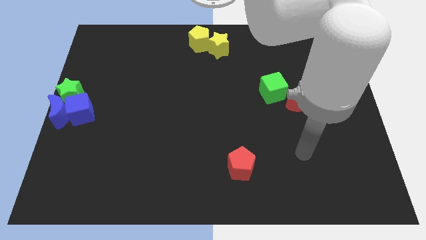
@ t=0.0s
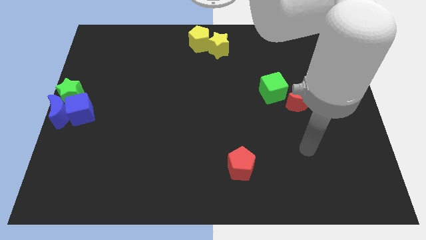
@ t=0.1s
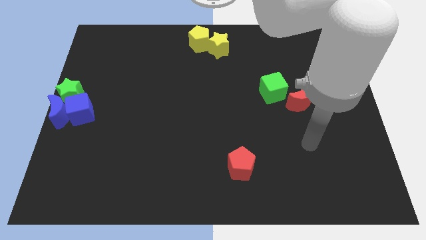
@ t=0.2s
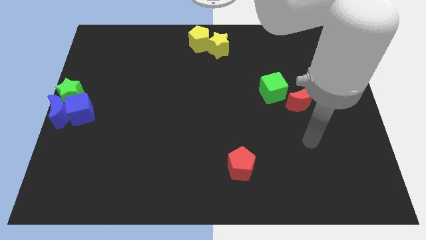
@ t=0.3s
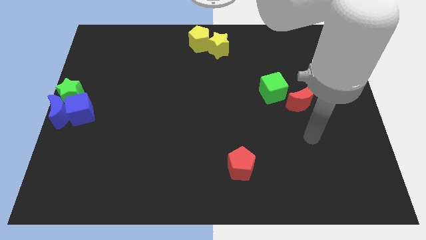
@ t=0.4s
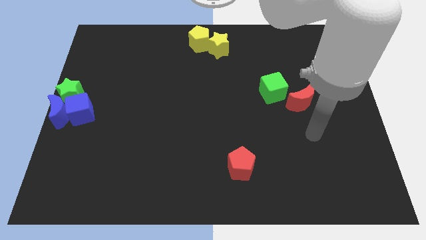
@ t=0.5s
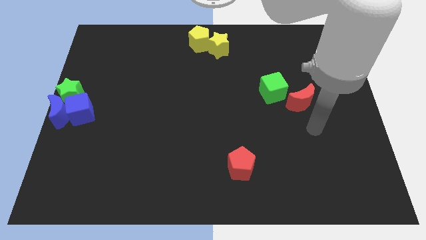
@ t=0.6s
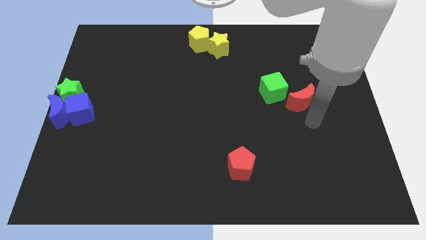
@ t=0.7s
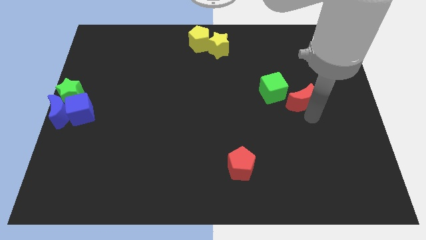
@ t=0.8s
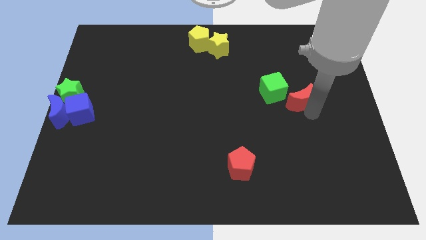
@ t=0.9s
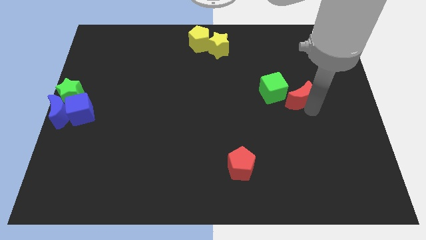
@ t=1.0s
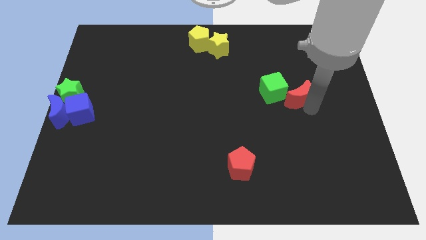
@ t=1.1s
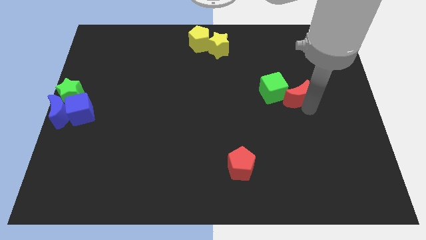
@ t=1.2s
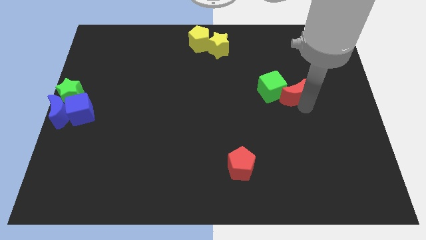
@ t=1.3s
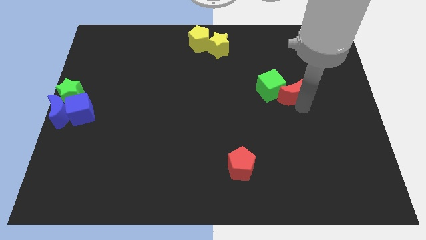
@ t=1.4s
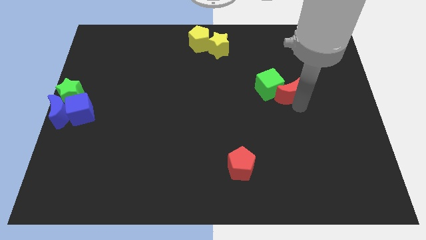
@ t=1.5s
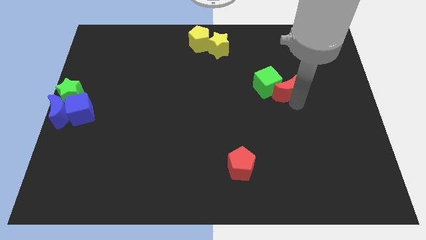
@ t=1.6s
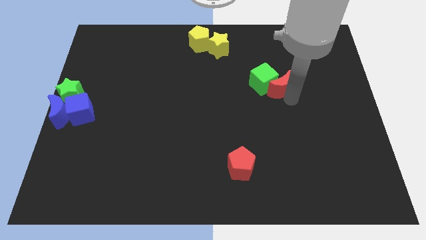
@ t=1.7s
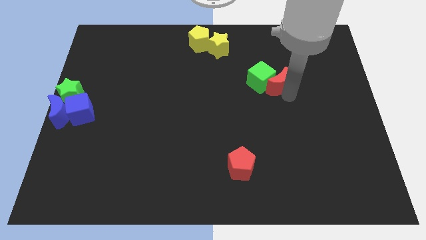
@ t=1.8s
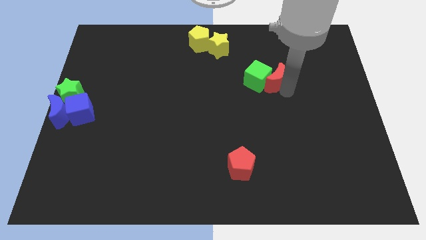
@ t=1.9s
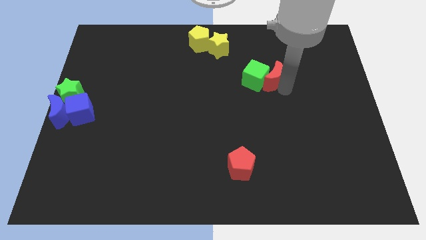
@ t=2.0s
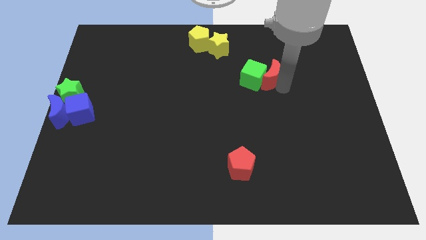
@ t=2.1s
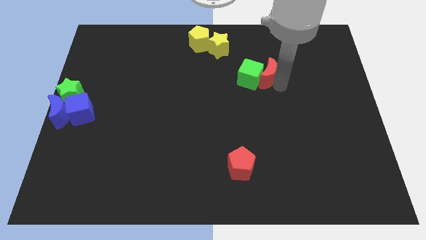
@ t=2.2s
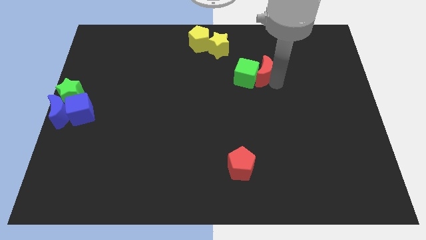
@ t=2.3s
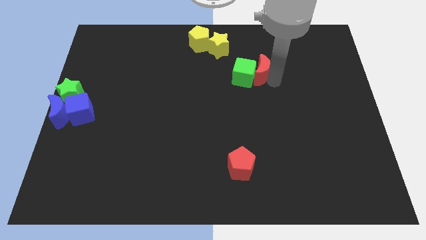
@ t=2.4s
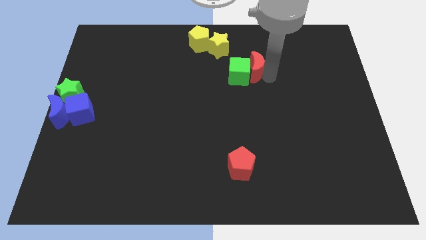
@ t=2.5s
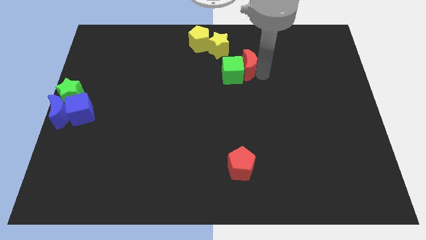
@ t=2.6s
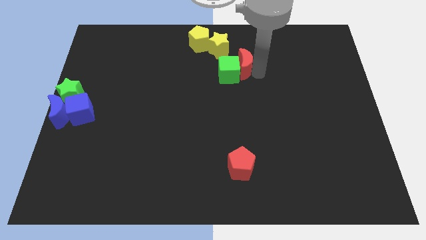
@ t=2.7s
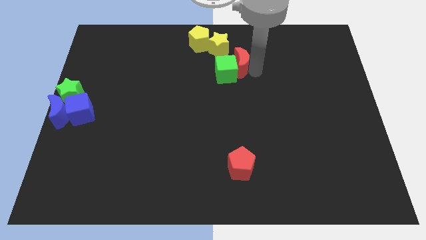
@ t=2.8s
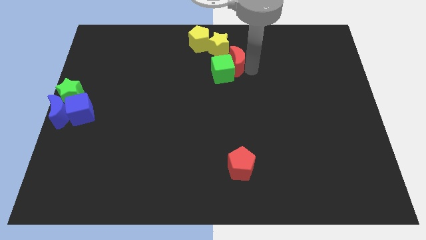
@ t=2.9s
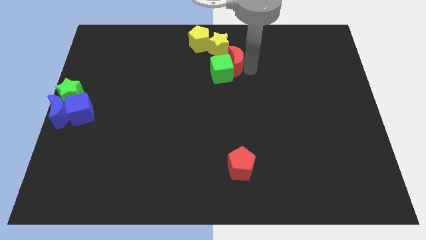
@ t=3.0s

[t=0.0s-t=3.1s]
place green cube and red moon below yellow star

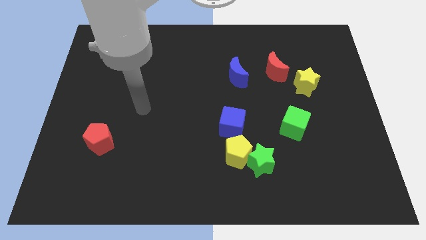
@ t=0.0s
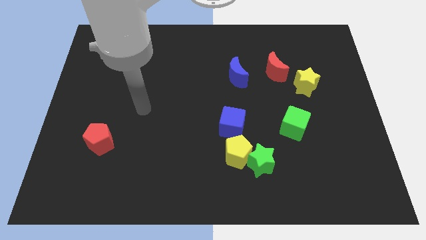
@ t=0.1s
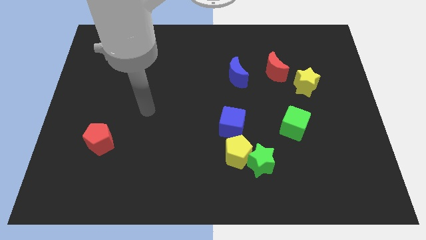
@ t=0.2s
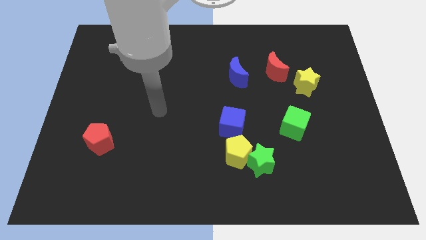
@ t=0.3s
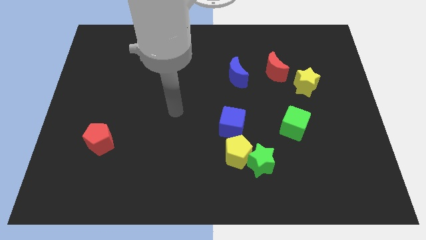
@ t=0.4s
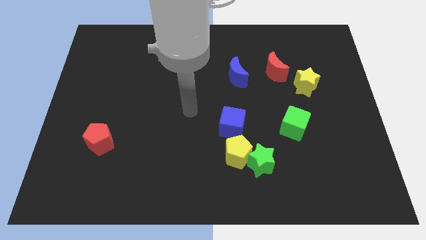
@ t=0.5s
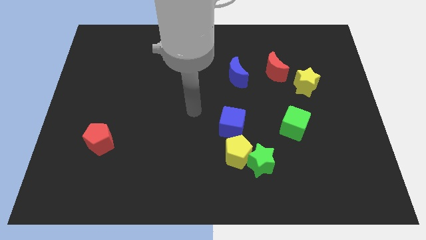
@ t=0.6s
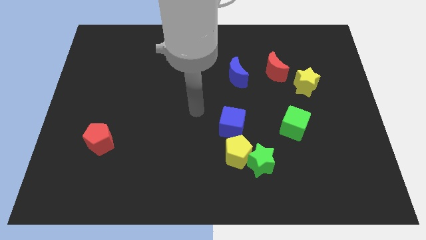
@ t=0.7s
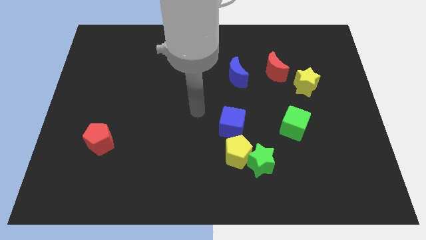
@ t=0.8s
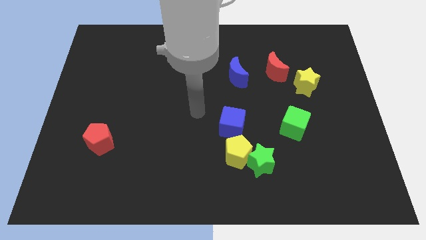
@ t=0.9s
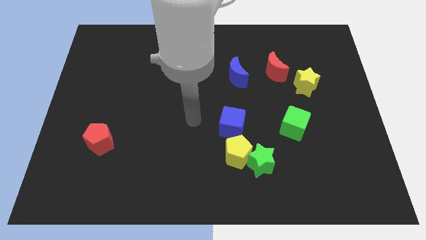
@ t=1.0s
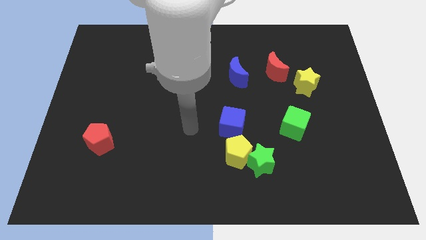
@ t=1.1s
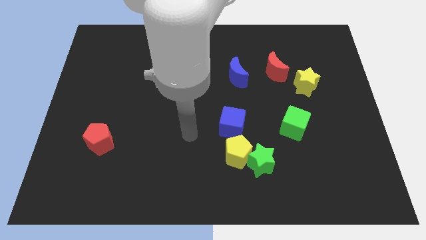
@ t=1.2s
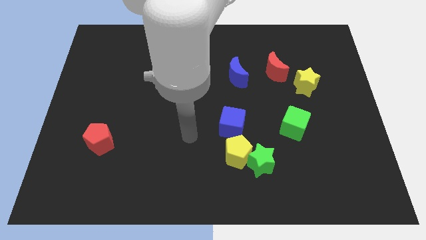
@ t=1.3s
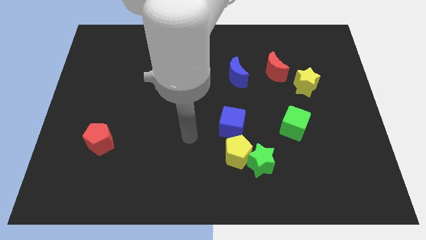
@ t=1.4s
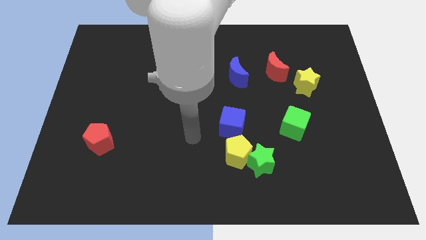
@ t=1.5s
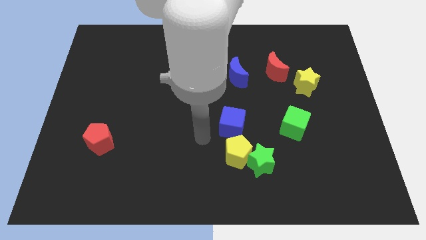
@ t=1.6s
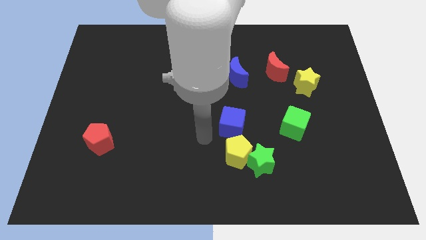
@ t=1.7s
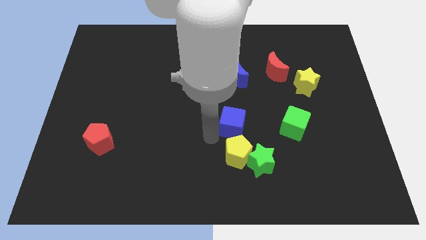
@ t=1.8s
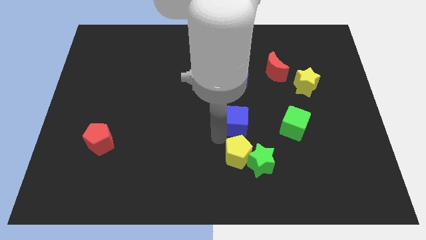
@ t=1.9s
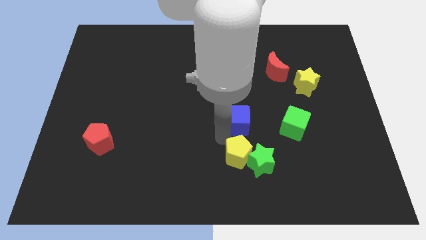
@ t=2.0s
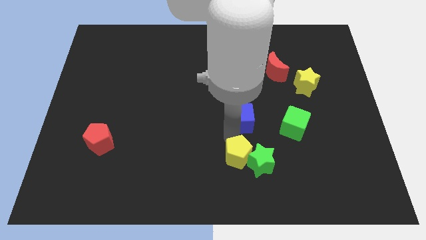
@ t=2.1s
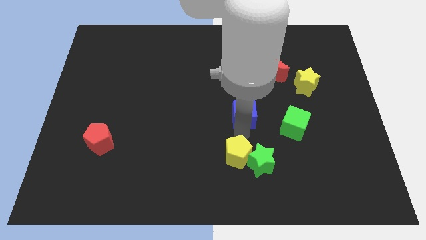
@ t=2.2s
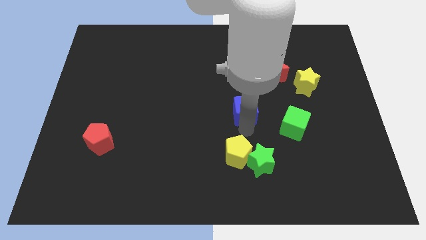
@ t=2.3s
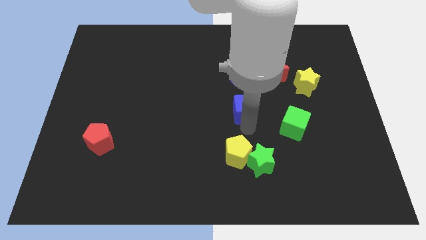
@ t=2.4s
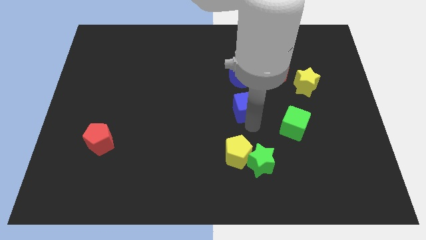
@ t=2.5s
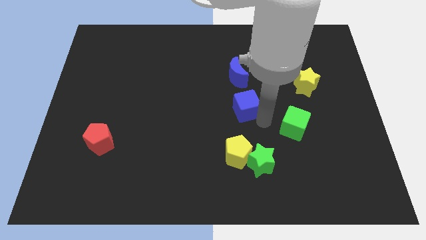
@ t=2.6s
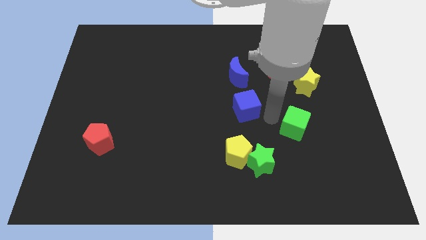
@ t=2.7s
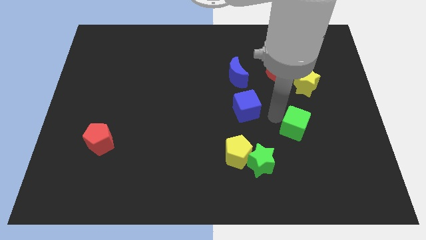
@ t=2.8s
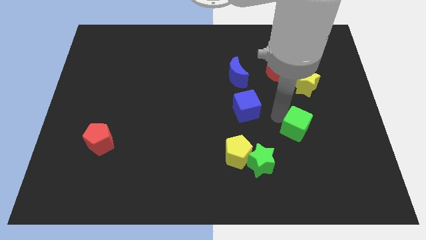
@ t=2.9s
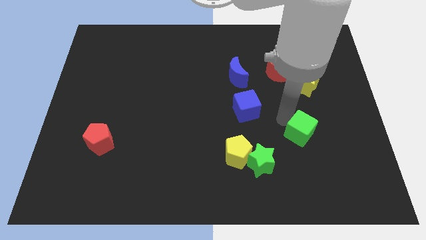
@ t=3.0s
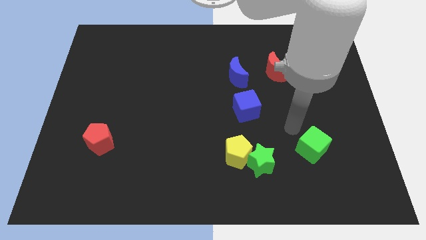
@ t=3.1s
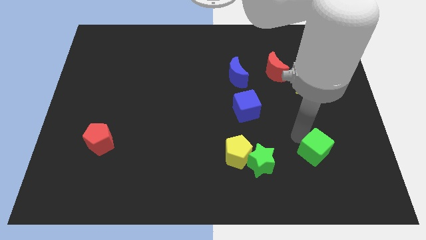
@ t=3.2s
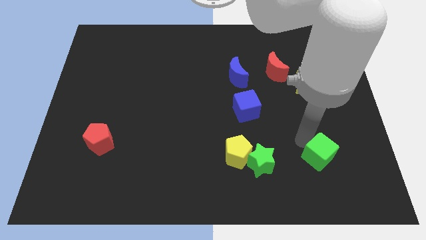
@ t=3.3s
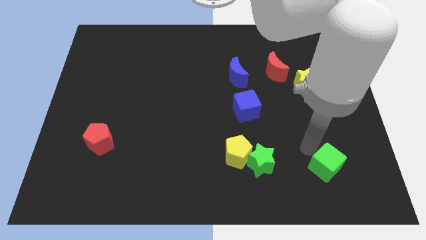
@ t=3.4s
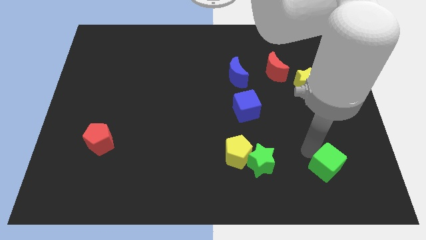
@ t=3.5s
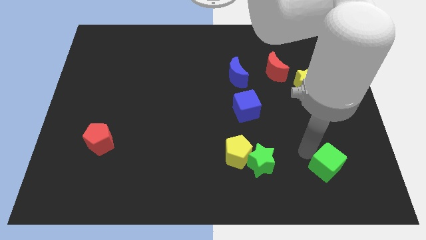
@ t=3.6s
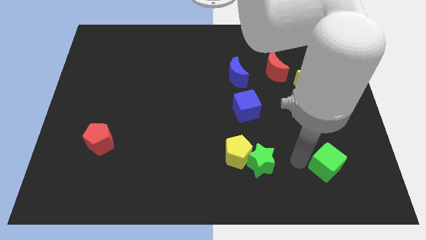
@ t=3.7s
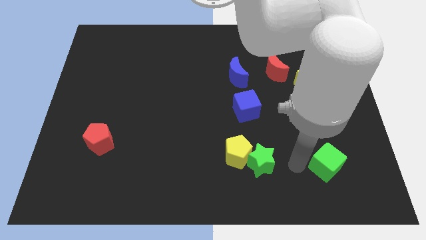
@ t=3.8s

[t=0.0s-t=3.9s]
place green cube parallel to green star

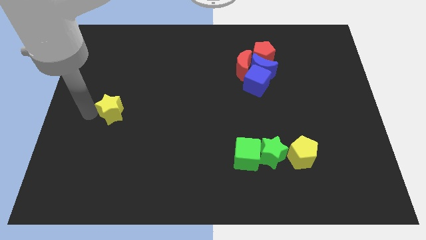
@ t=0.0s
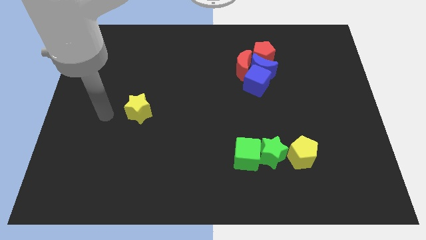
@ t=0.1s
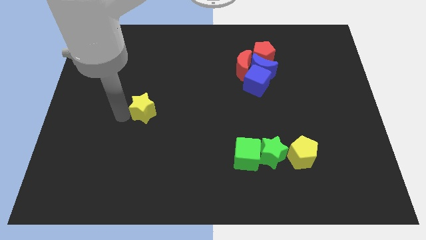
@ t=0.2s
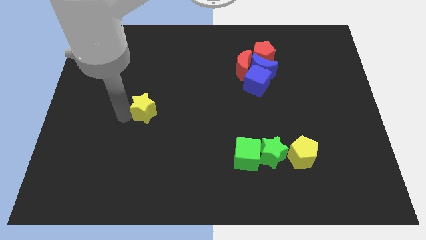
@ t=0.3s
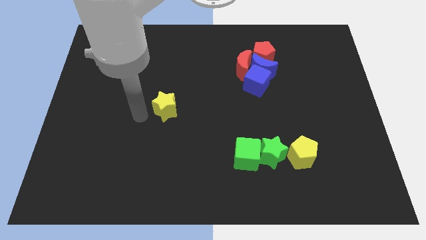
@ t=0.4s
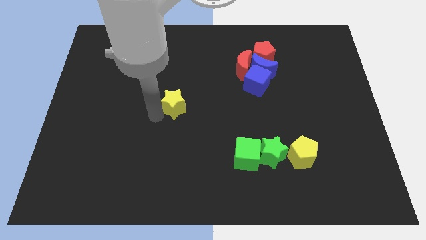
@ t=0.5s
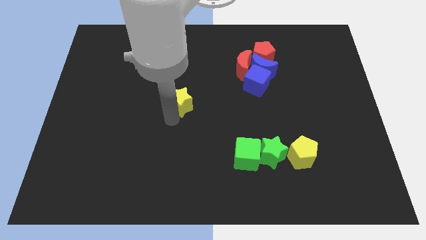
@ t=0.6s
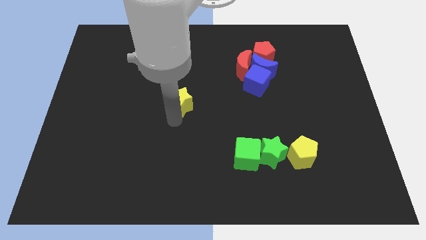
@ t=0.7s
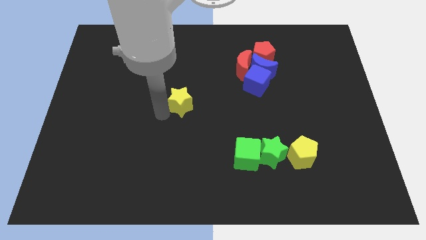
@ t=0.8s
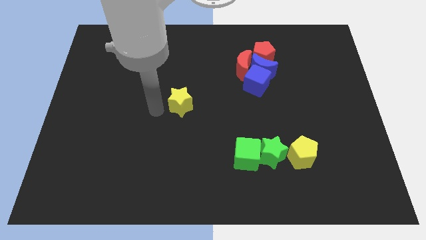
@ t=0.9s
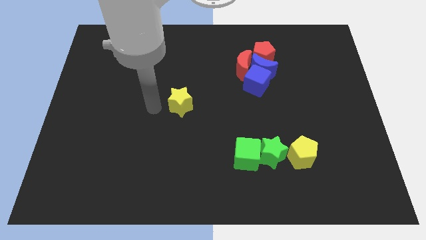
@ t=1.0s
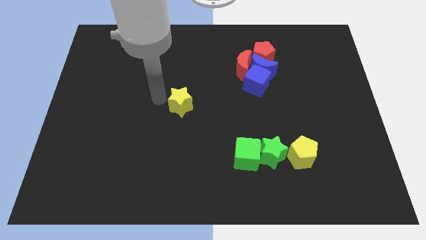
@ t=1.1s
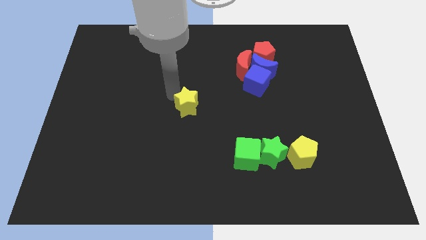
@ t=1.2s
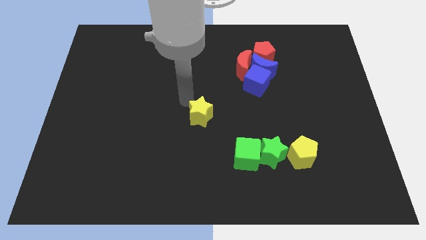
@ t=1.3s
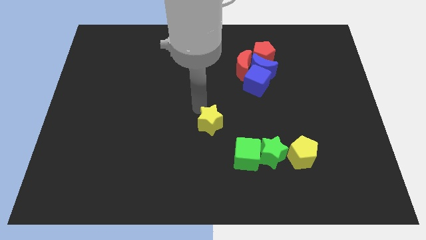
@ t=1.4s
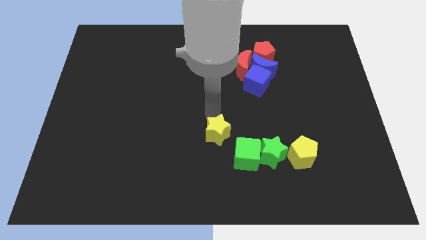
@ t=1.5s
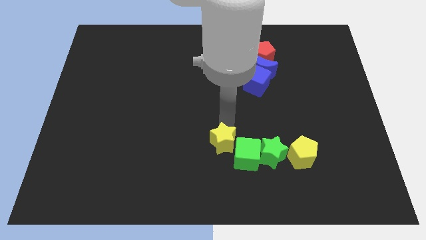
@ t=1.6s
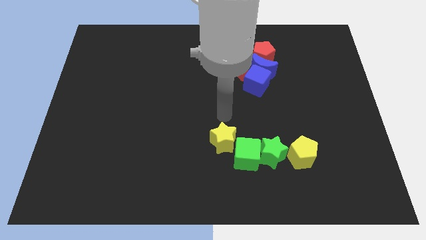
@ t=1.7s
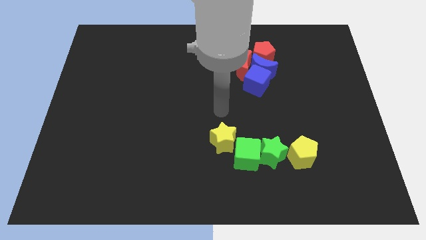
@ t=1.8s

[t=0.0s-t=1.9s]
move the yellow star towards the green cube
